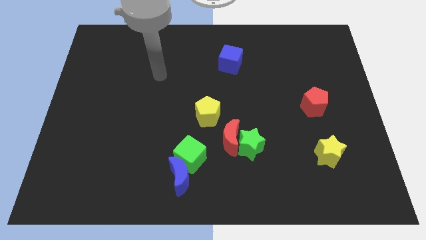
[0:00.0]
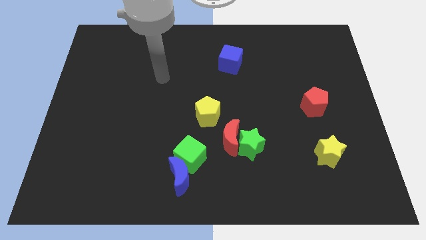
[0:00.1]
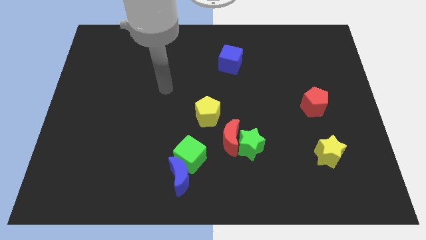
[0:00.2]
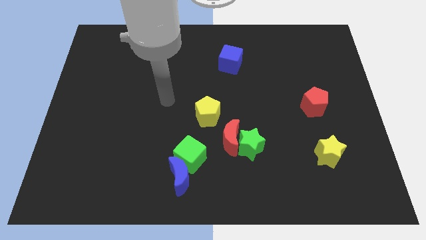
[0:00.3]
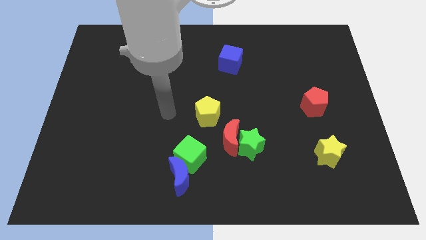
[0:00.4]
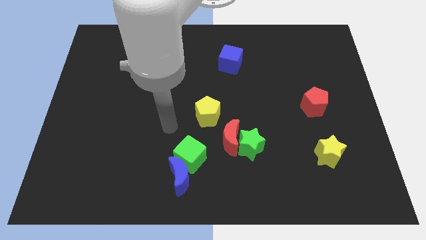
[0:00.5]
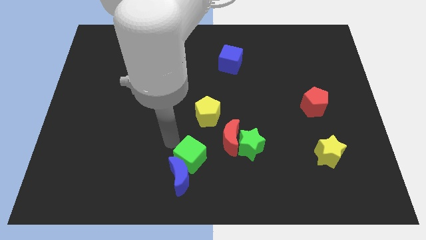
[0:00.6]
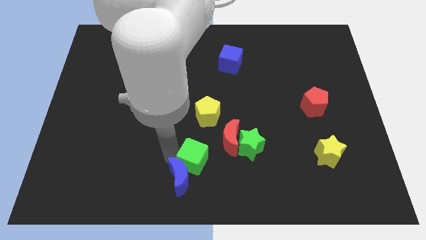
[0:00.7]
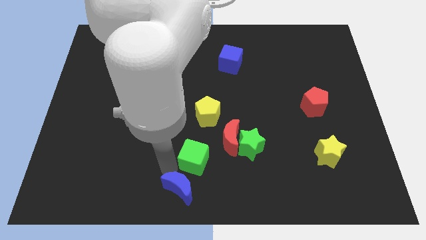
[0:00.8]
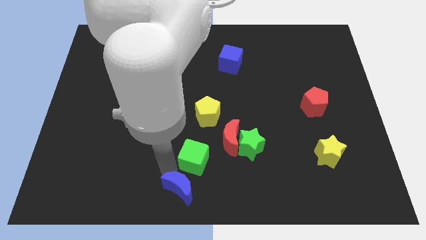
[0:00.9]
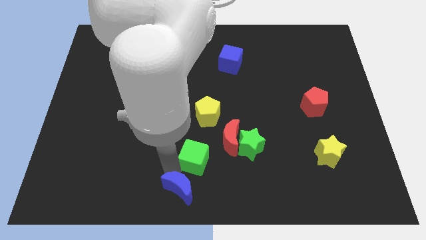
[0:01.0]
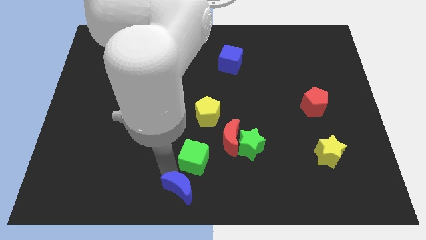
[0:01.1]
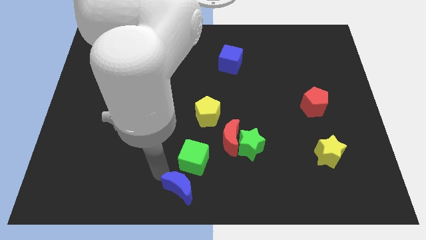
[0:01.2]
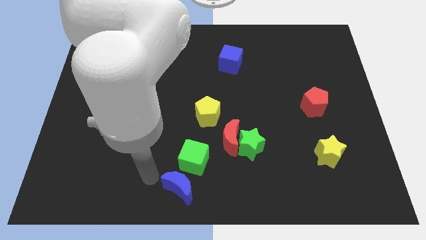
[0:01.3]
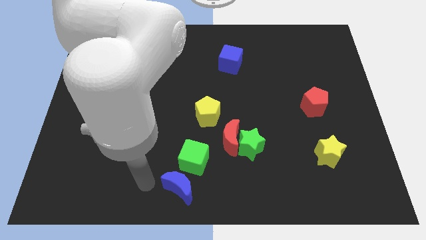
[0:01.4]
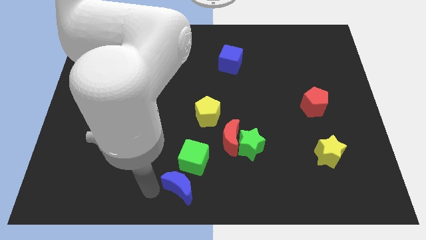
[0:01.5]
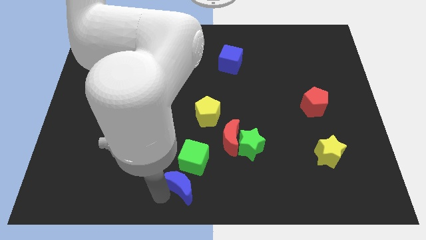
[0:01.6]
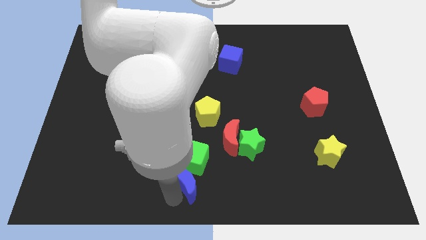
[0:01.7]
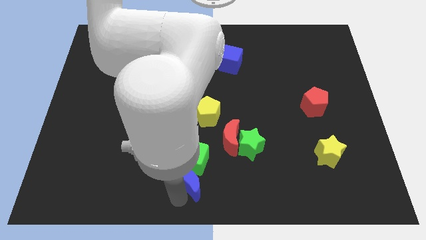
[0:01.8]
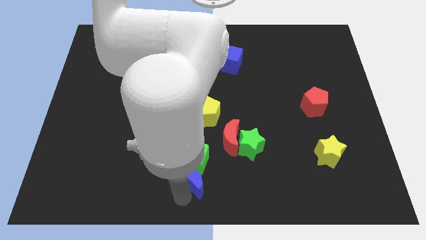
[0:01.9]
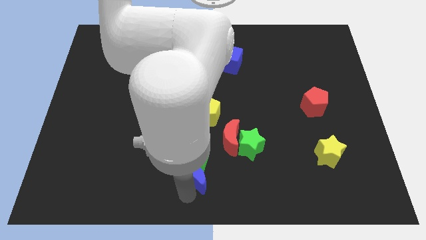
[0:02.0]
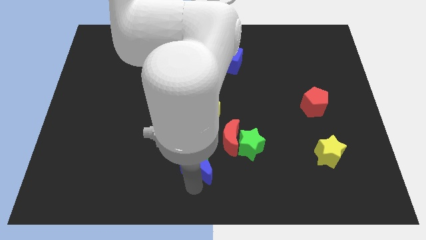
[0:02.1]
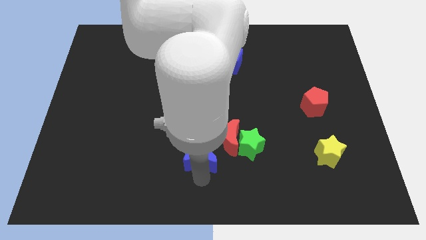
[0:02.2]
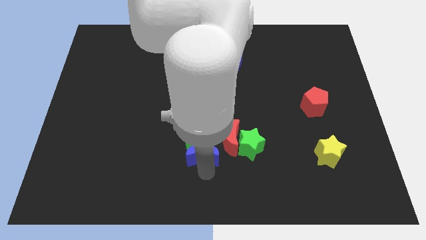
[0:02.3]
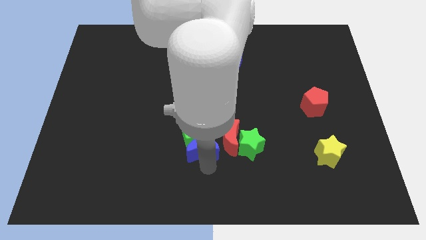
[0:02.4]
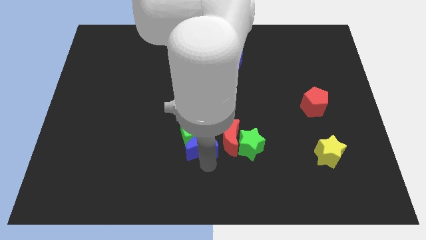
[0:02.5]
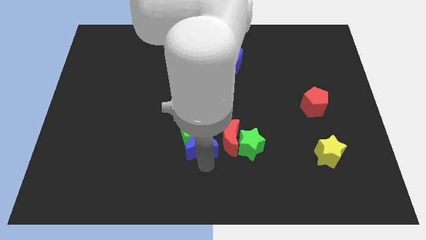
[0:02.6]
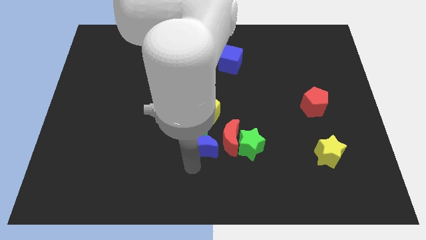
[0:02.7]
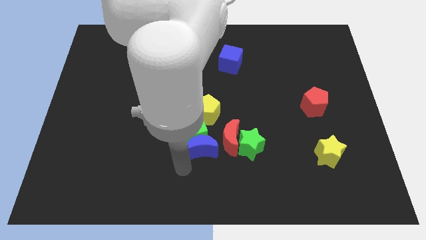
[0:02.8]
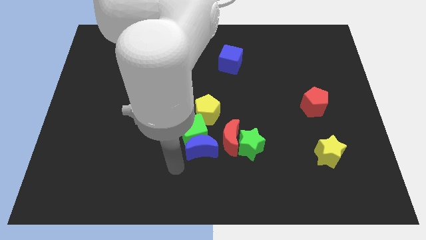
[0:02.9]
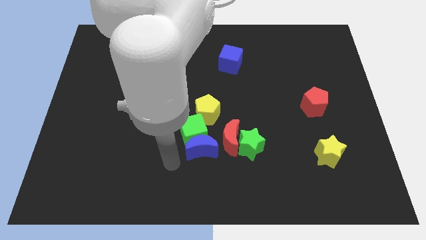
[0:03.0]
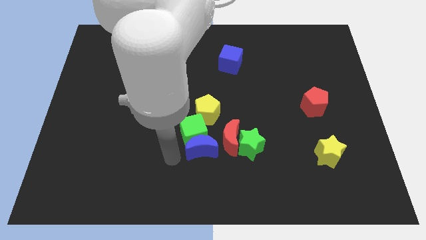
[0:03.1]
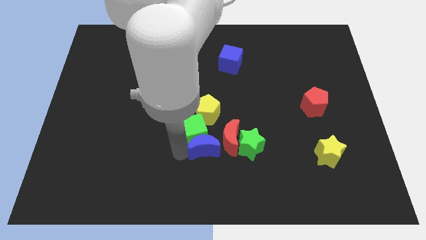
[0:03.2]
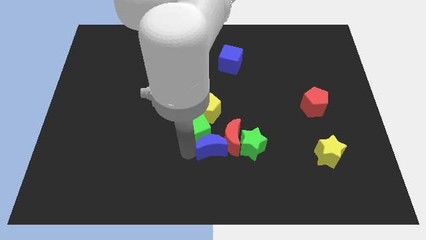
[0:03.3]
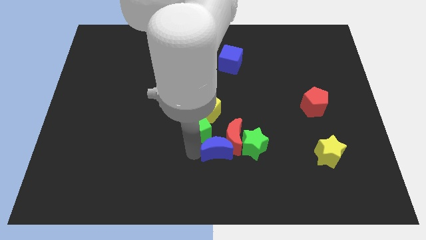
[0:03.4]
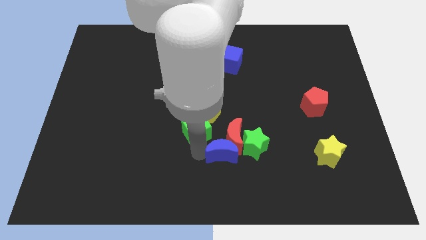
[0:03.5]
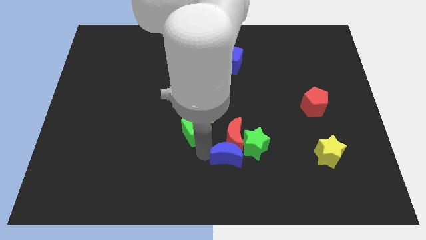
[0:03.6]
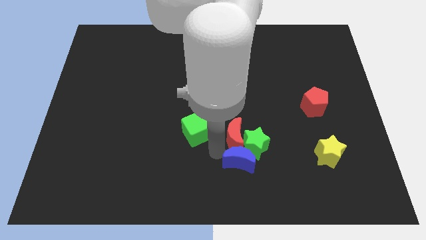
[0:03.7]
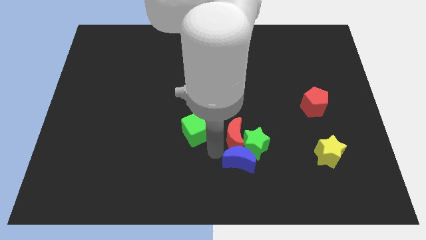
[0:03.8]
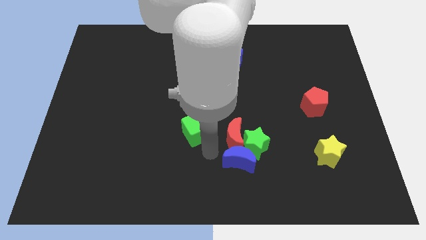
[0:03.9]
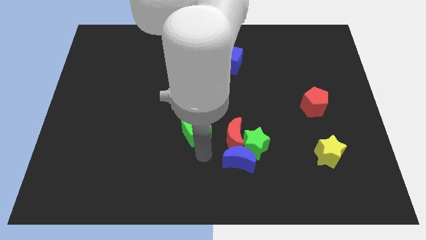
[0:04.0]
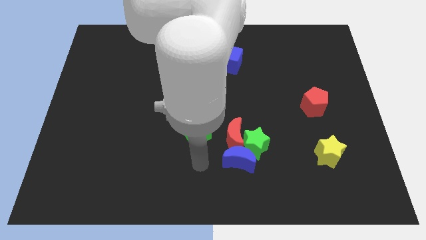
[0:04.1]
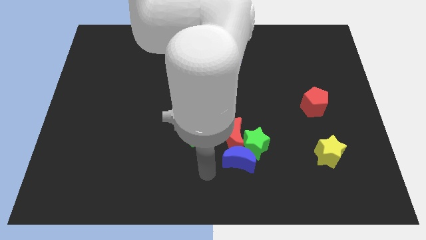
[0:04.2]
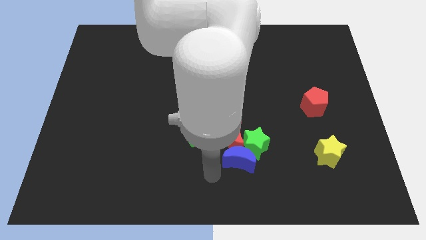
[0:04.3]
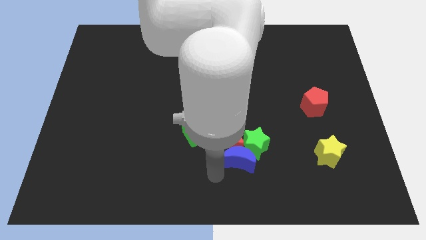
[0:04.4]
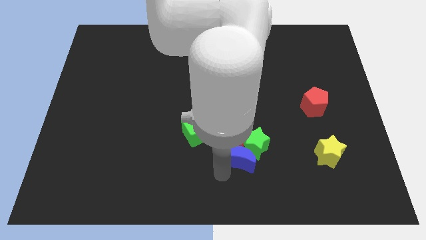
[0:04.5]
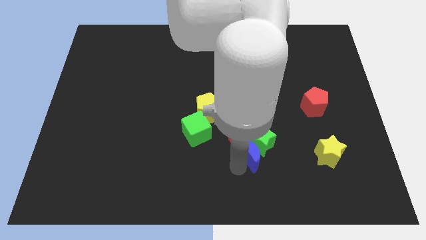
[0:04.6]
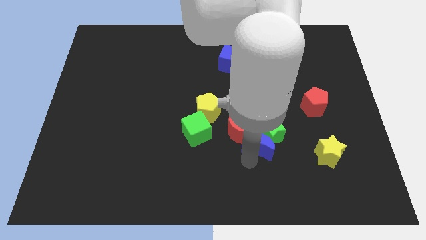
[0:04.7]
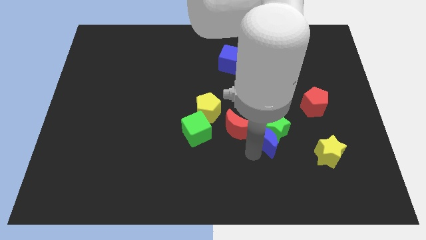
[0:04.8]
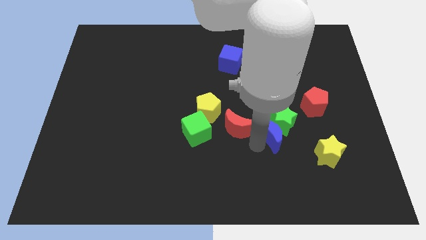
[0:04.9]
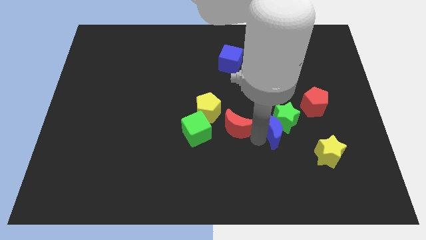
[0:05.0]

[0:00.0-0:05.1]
push blue crescent into the green star

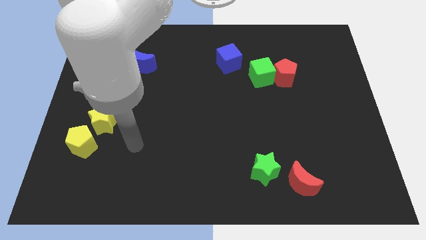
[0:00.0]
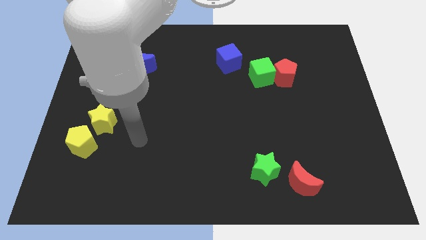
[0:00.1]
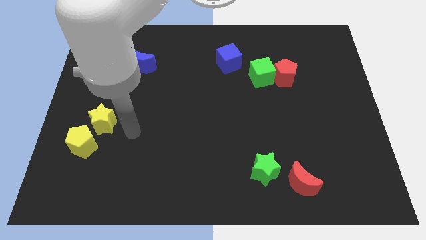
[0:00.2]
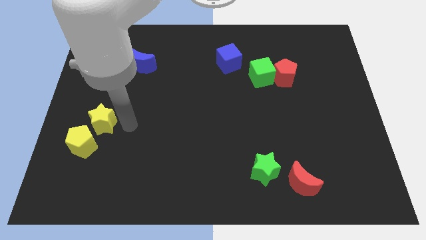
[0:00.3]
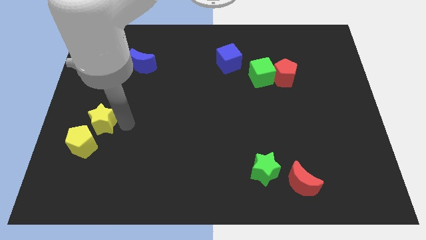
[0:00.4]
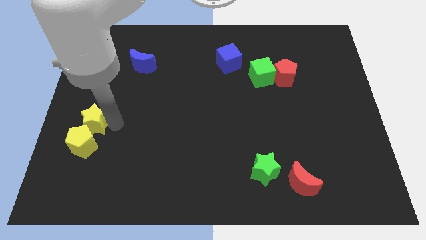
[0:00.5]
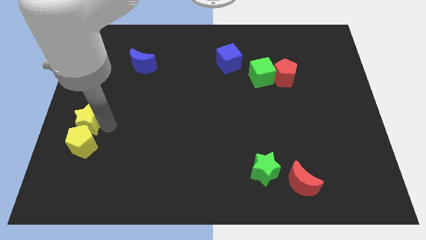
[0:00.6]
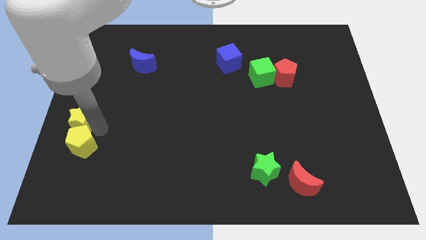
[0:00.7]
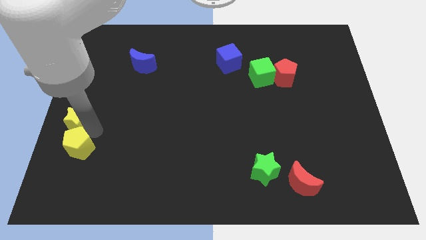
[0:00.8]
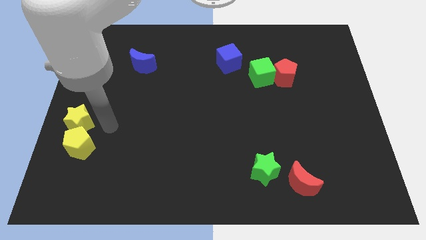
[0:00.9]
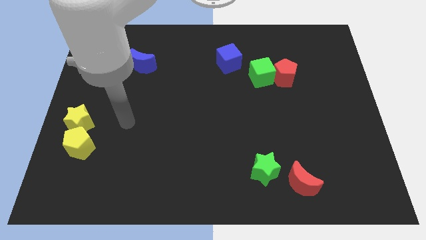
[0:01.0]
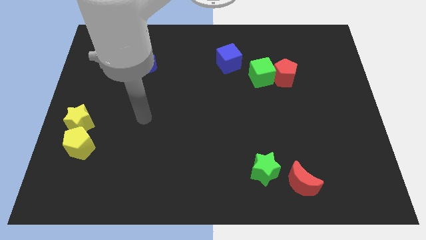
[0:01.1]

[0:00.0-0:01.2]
move the yellow star into the yellow pentagon

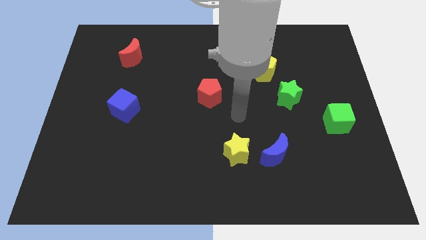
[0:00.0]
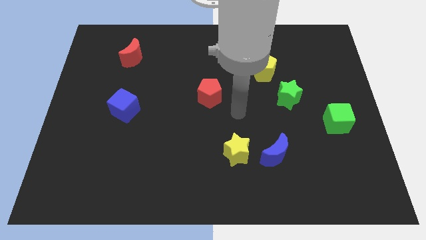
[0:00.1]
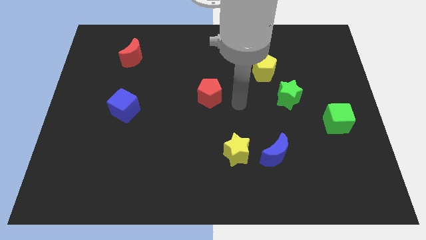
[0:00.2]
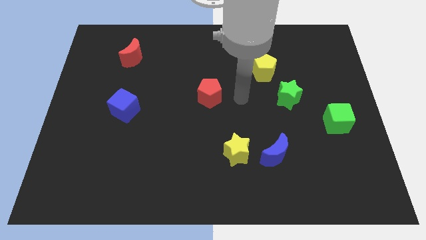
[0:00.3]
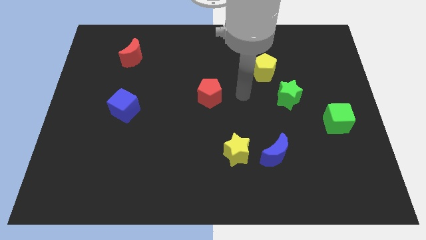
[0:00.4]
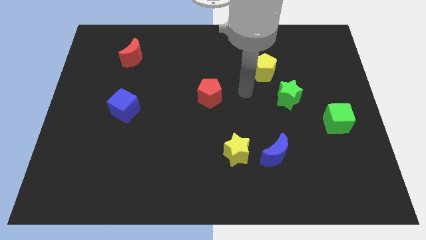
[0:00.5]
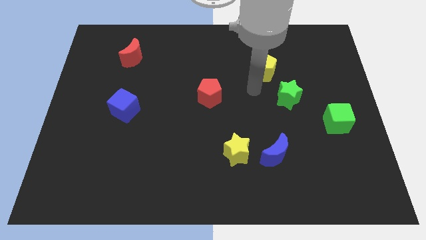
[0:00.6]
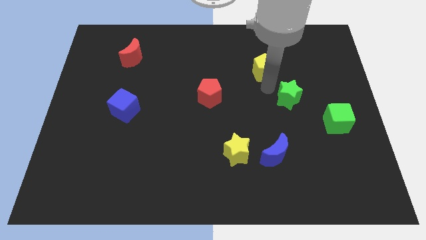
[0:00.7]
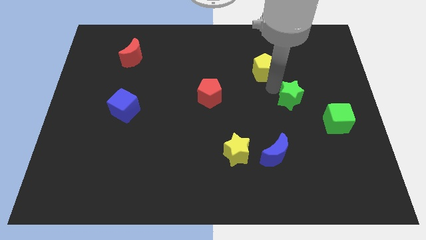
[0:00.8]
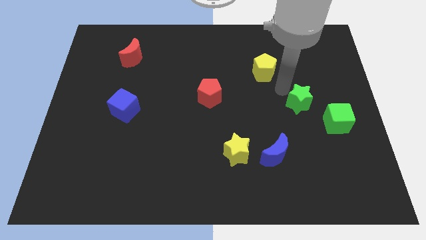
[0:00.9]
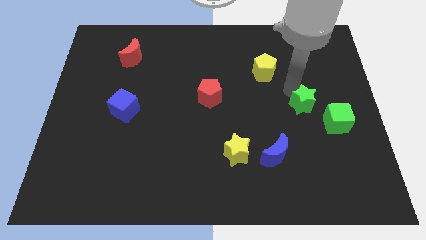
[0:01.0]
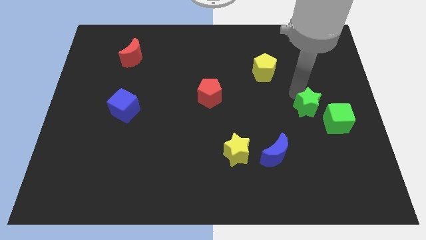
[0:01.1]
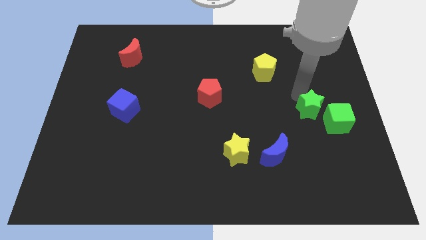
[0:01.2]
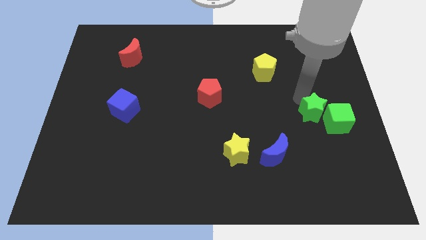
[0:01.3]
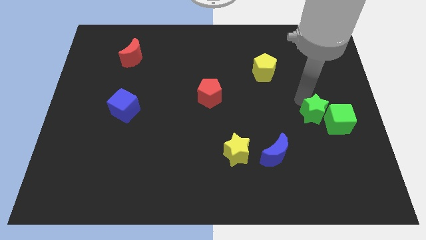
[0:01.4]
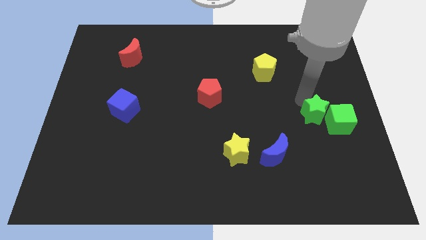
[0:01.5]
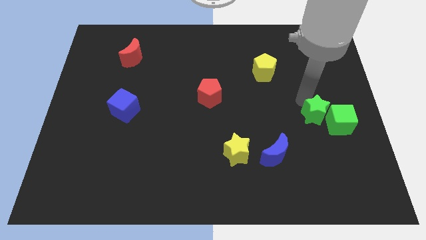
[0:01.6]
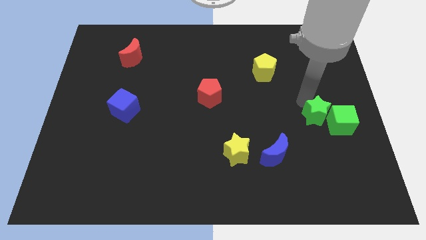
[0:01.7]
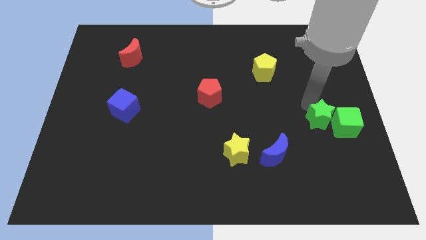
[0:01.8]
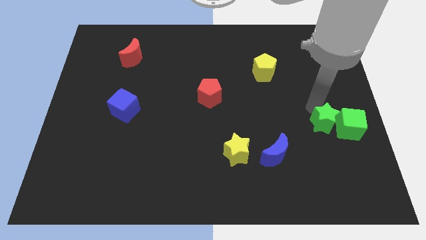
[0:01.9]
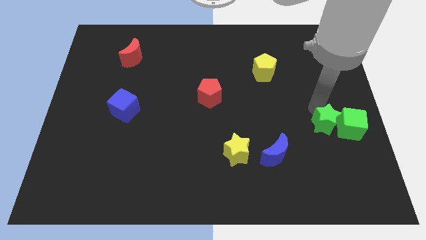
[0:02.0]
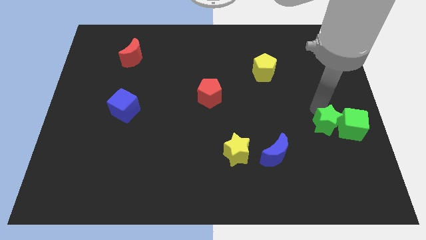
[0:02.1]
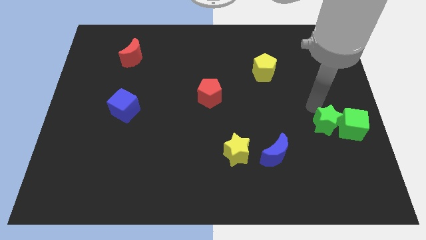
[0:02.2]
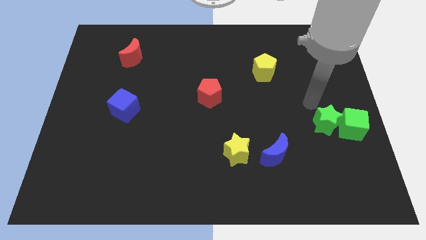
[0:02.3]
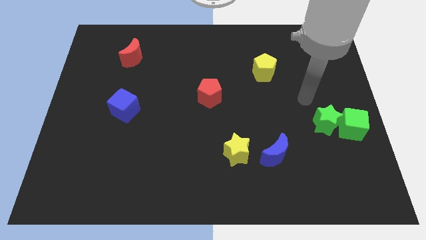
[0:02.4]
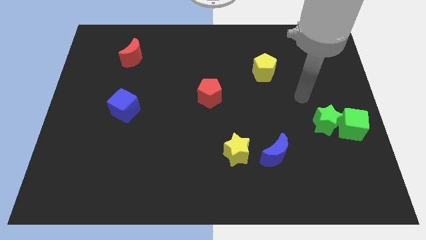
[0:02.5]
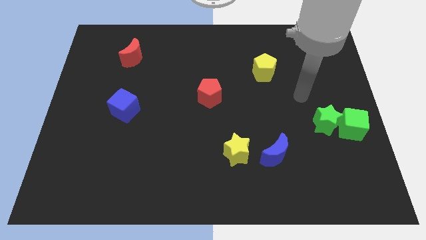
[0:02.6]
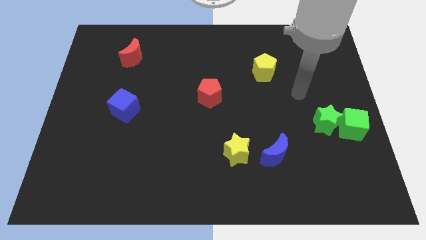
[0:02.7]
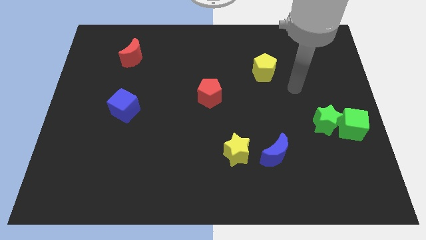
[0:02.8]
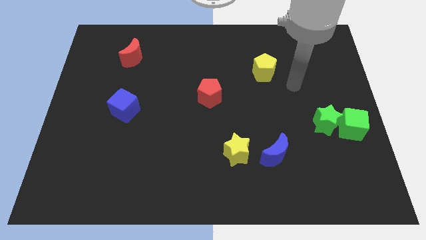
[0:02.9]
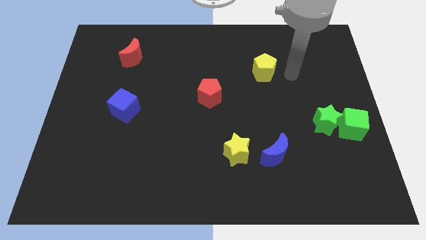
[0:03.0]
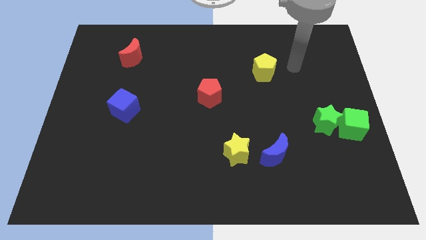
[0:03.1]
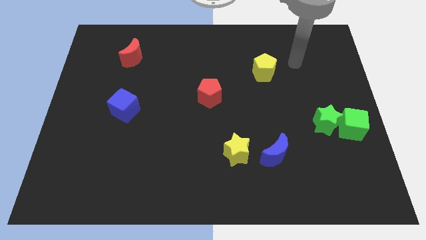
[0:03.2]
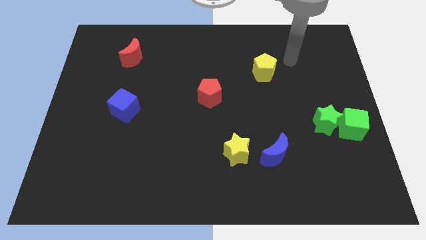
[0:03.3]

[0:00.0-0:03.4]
put the green star into the green cube
